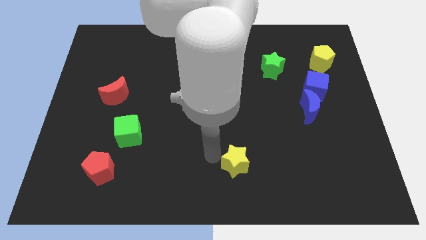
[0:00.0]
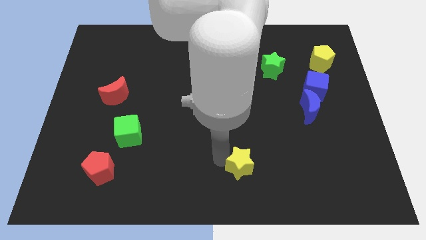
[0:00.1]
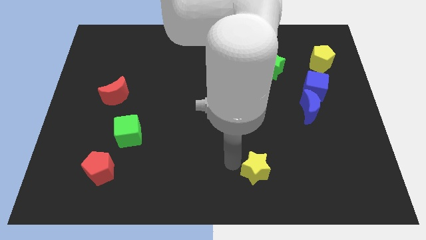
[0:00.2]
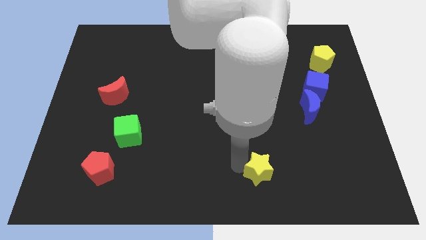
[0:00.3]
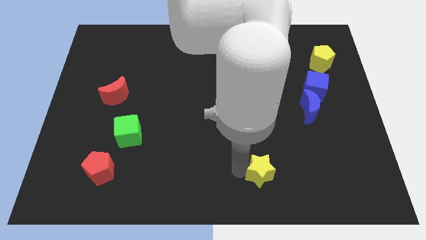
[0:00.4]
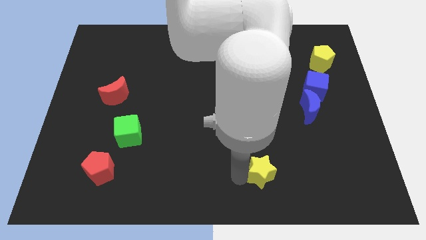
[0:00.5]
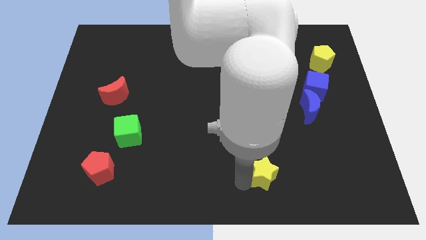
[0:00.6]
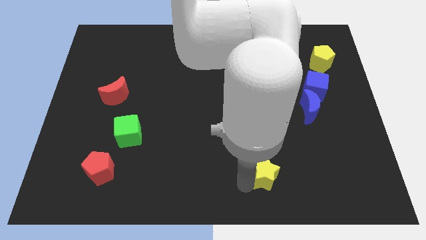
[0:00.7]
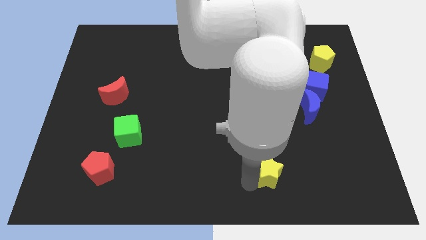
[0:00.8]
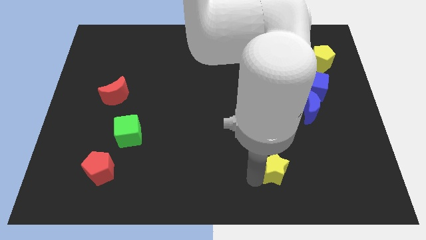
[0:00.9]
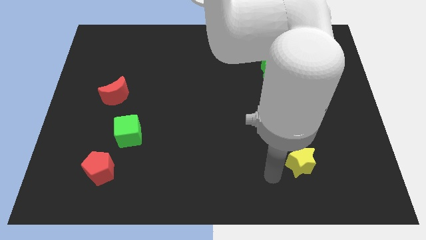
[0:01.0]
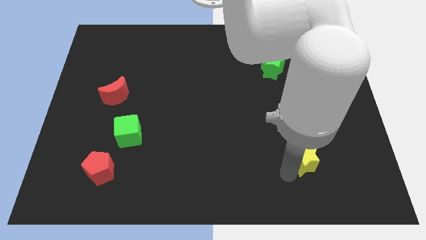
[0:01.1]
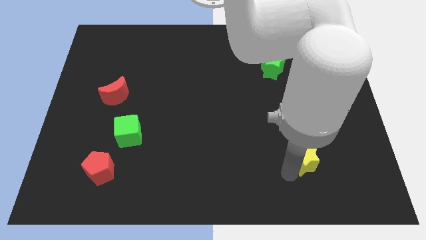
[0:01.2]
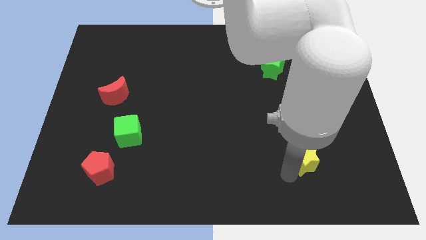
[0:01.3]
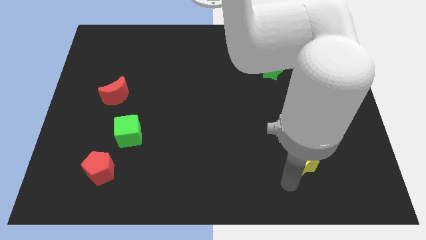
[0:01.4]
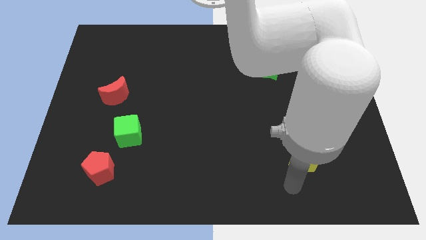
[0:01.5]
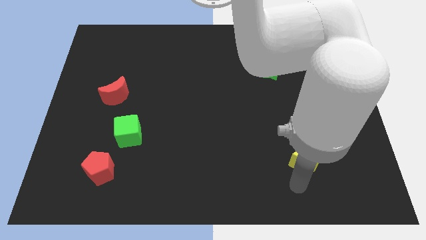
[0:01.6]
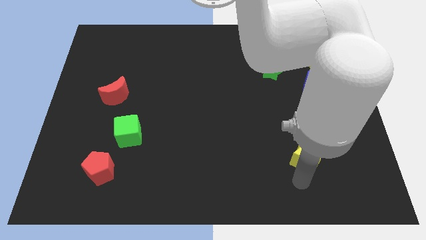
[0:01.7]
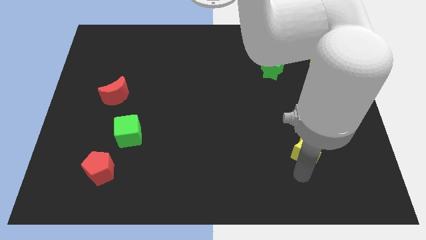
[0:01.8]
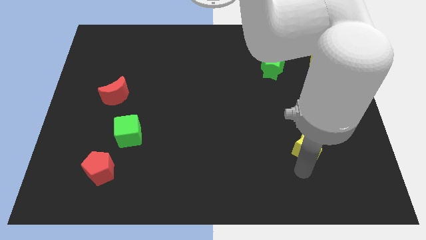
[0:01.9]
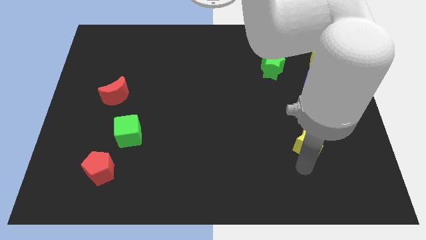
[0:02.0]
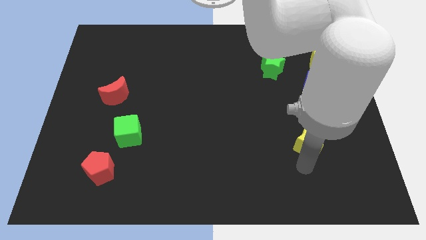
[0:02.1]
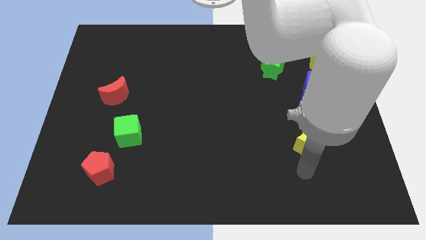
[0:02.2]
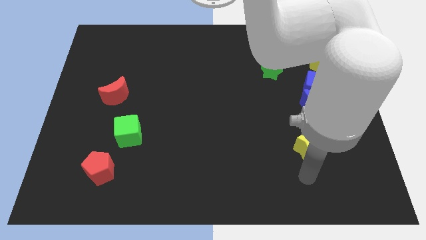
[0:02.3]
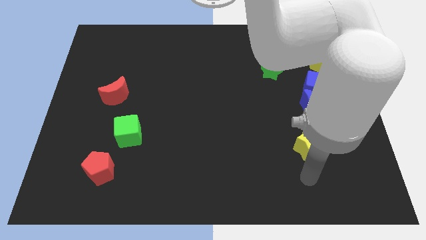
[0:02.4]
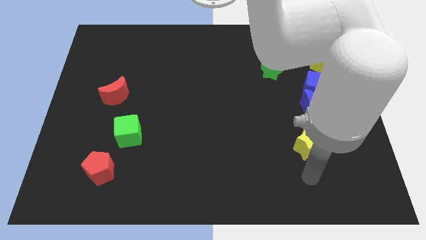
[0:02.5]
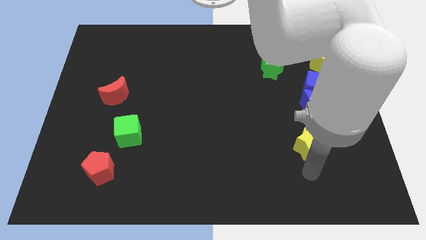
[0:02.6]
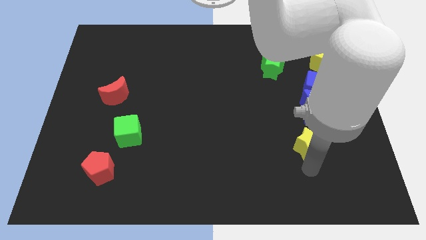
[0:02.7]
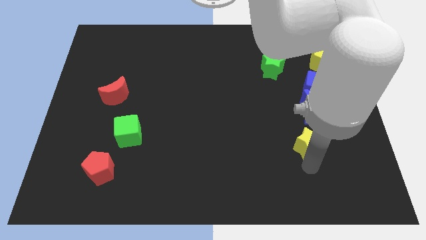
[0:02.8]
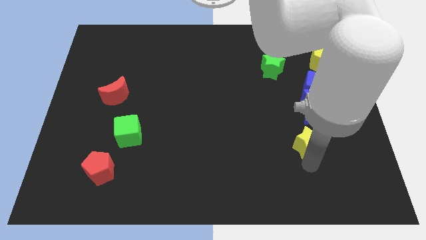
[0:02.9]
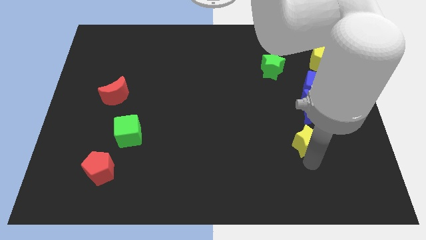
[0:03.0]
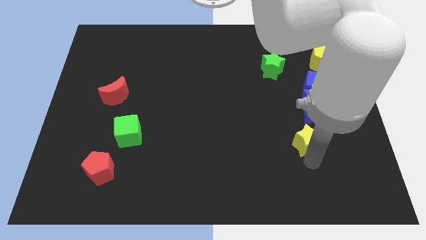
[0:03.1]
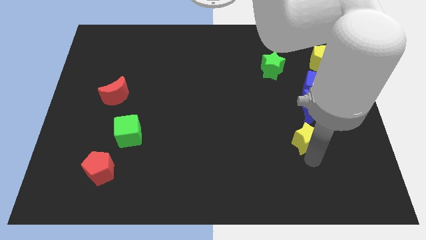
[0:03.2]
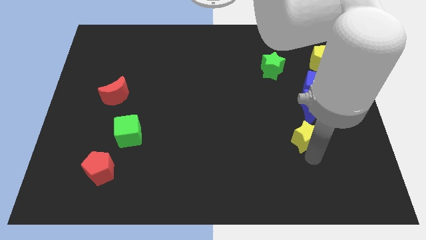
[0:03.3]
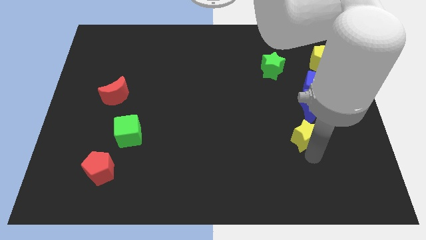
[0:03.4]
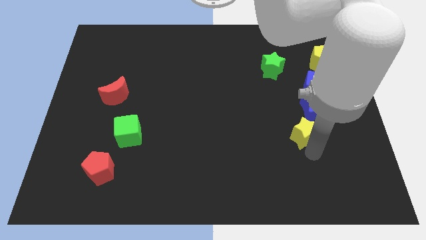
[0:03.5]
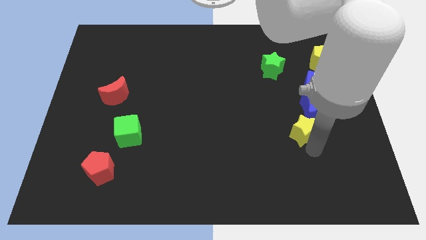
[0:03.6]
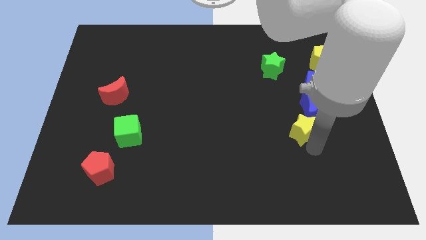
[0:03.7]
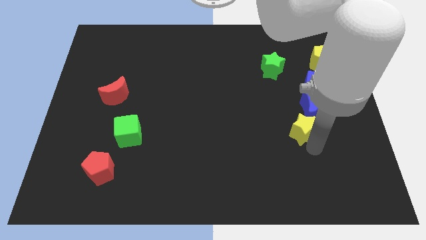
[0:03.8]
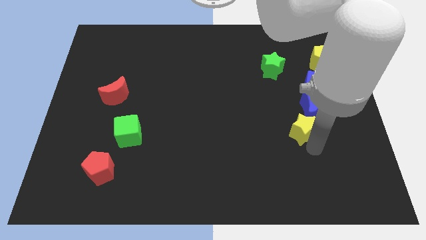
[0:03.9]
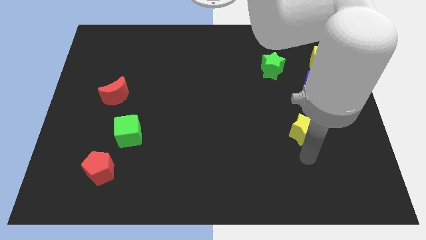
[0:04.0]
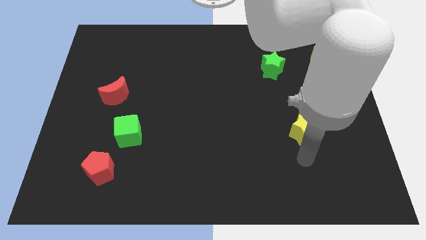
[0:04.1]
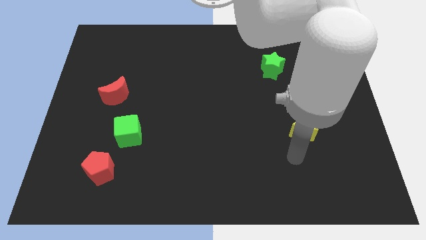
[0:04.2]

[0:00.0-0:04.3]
move the yellow star below the blue moon

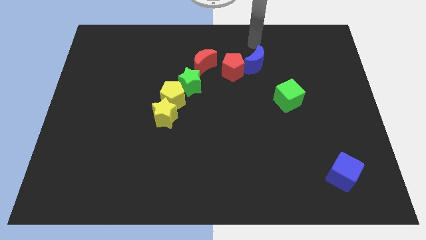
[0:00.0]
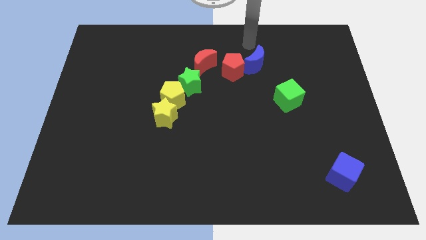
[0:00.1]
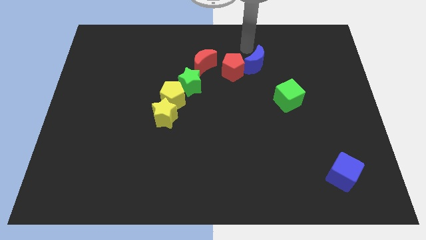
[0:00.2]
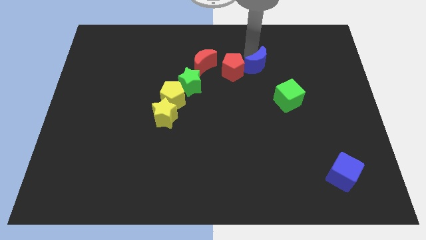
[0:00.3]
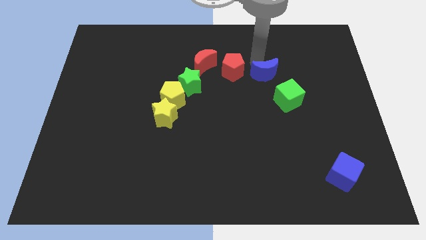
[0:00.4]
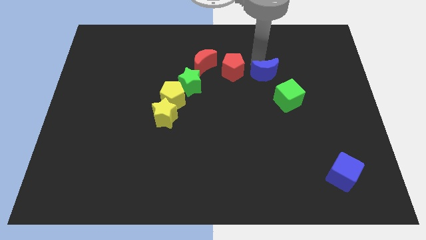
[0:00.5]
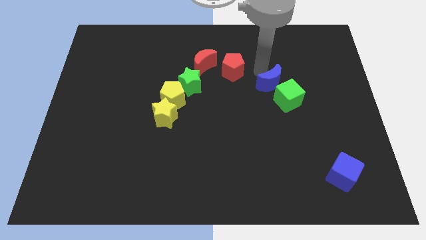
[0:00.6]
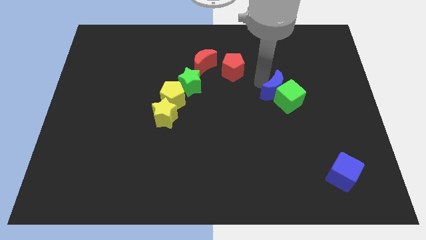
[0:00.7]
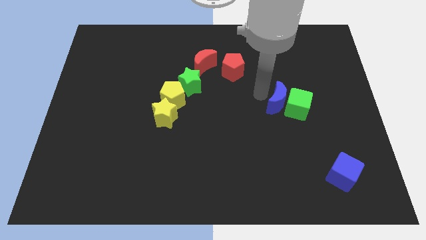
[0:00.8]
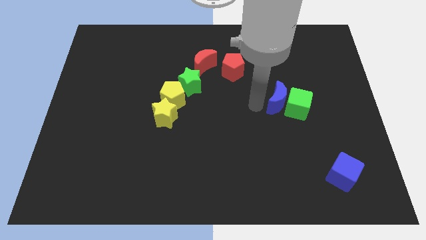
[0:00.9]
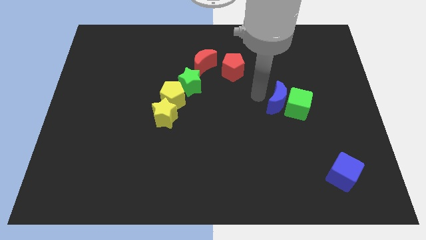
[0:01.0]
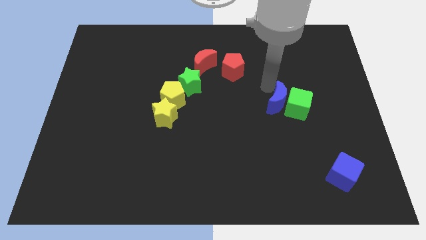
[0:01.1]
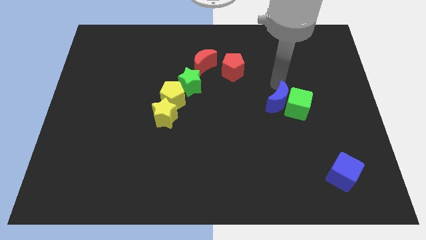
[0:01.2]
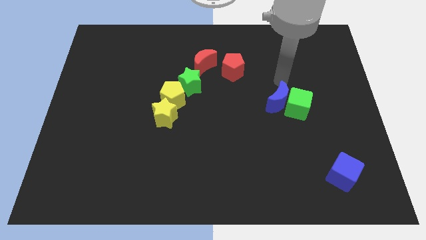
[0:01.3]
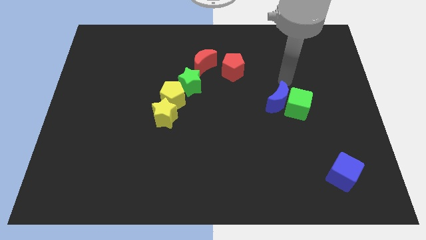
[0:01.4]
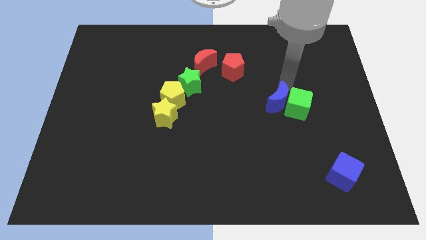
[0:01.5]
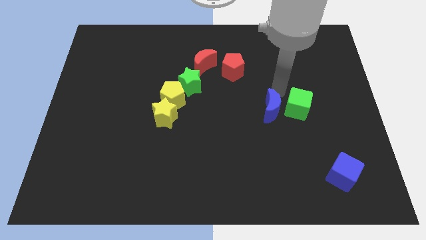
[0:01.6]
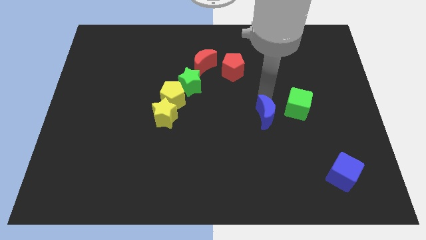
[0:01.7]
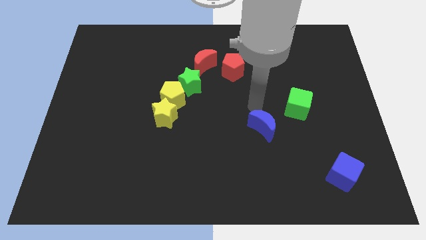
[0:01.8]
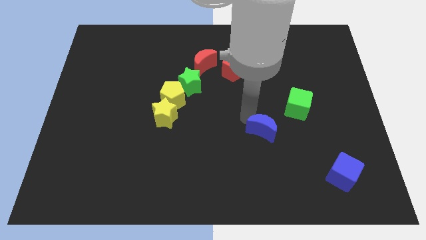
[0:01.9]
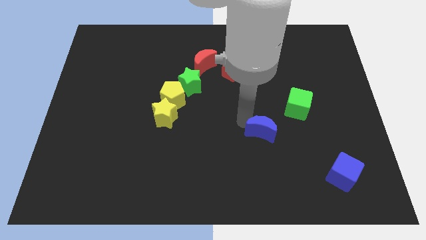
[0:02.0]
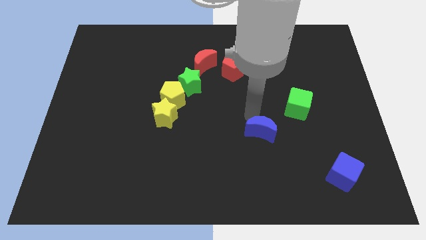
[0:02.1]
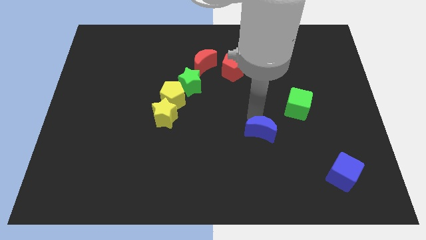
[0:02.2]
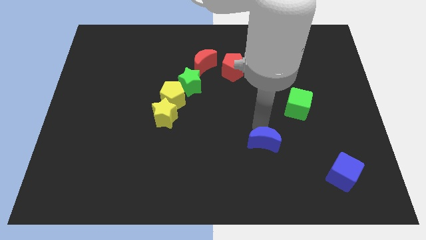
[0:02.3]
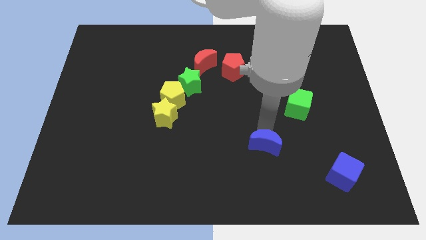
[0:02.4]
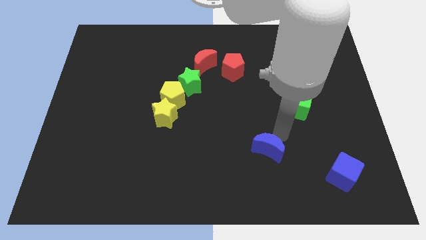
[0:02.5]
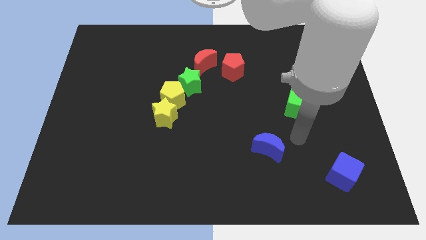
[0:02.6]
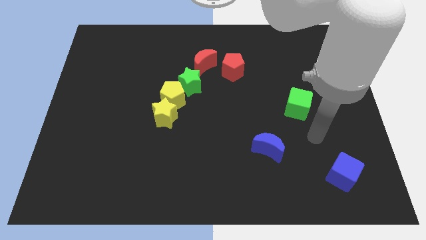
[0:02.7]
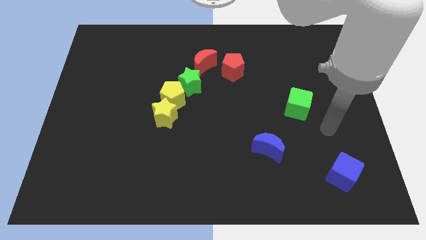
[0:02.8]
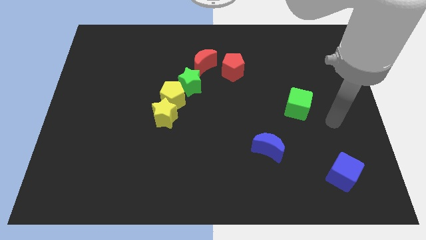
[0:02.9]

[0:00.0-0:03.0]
move the blue crescent to the bottom left of the green cube

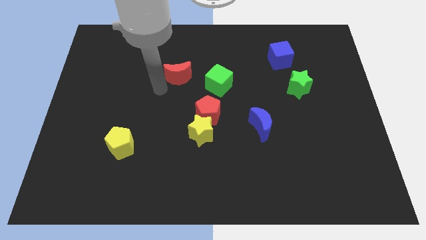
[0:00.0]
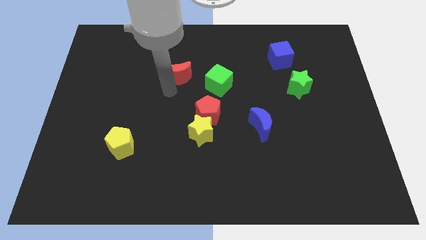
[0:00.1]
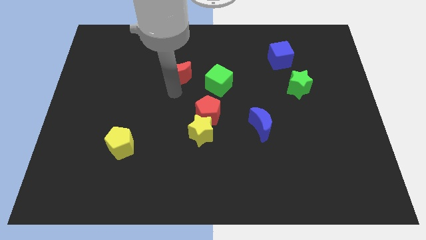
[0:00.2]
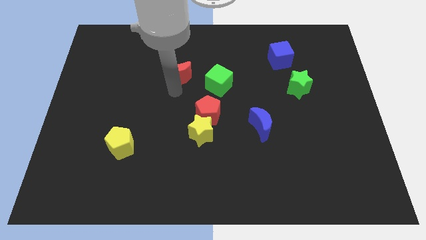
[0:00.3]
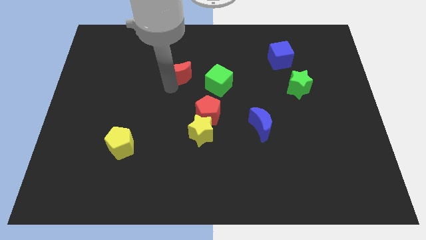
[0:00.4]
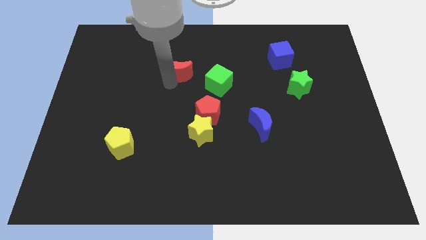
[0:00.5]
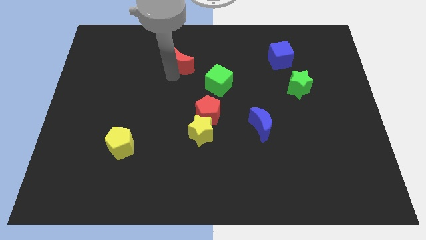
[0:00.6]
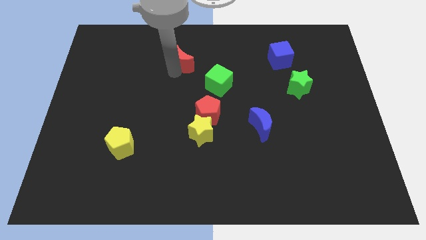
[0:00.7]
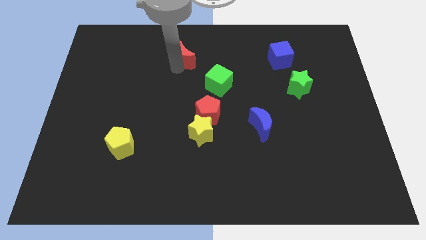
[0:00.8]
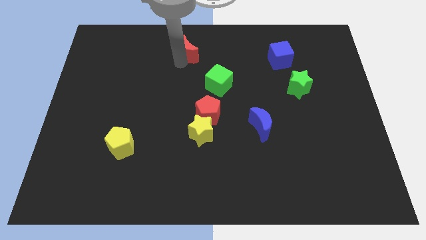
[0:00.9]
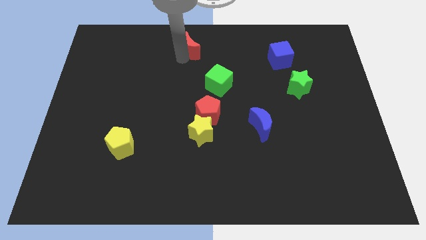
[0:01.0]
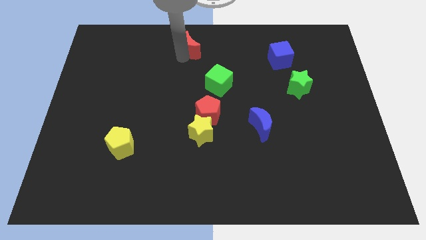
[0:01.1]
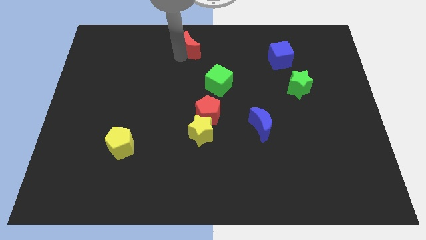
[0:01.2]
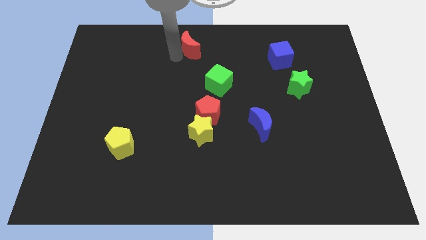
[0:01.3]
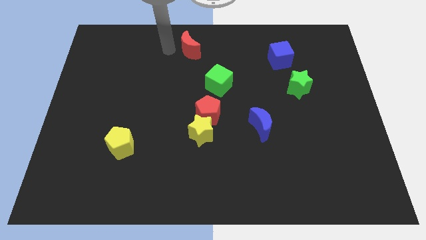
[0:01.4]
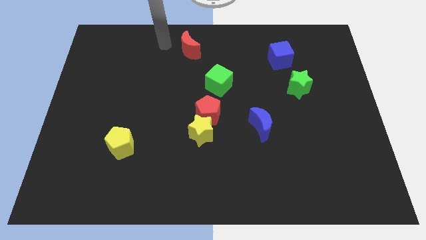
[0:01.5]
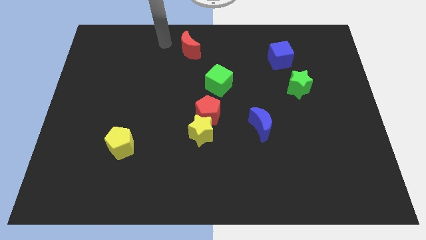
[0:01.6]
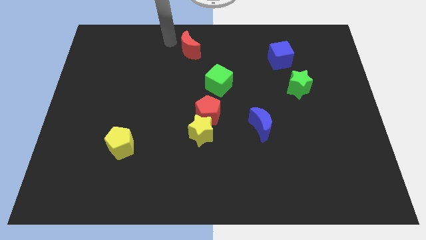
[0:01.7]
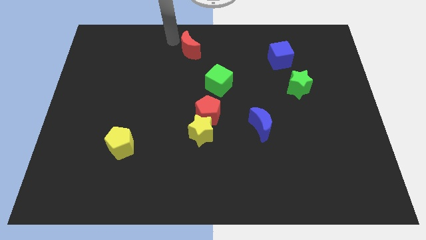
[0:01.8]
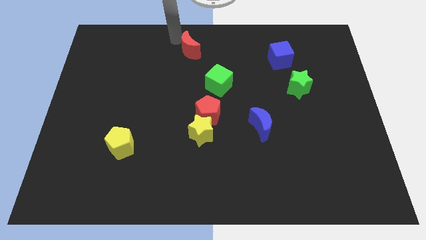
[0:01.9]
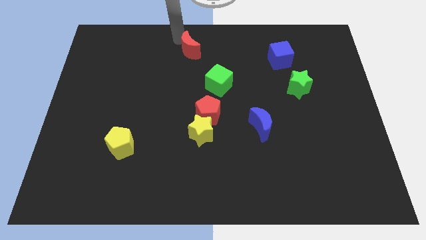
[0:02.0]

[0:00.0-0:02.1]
move the red crescent to top middle of the board
